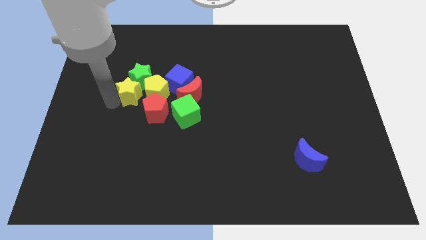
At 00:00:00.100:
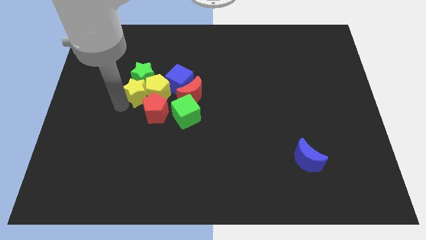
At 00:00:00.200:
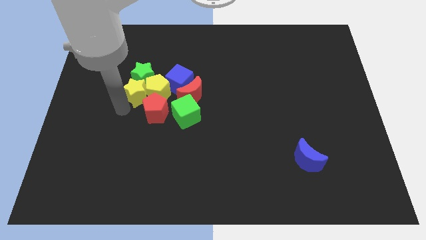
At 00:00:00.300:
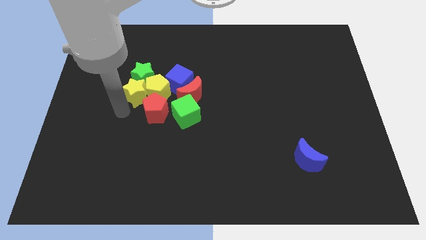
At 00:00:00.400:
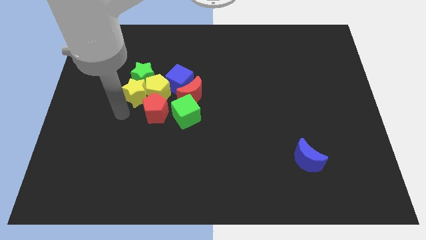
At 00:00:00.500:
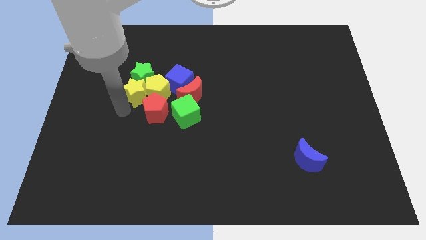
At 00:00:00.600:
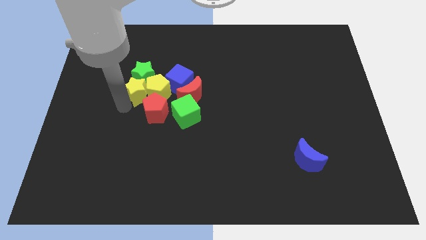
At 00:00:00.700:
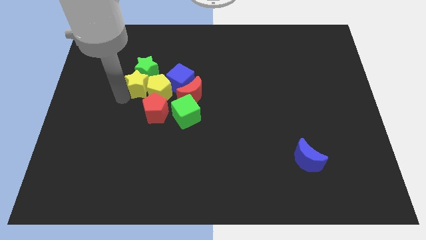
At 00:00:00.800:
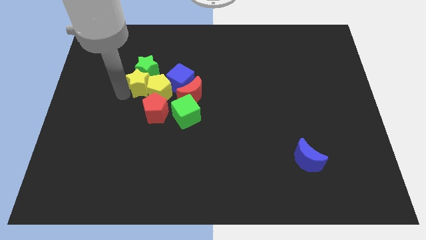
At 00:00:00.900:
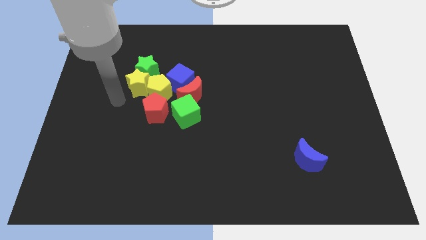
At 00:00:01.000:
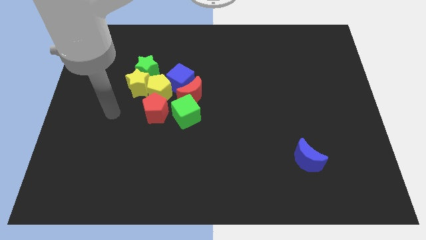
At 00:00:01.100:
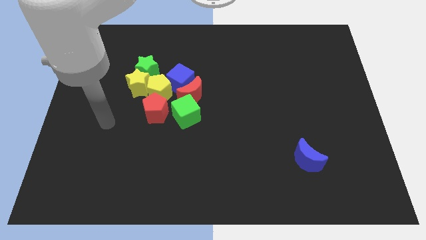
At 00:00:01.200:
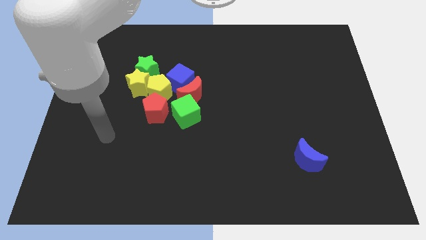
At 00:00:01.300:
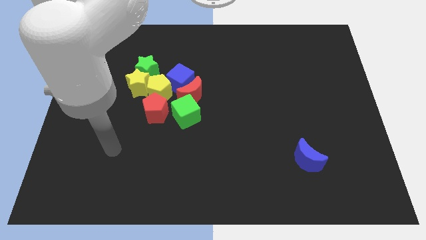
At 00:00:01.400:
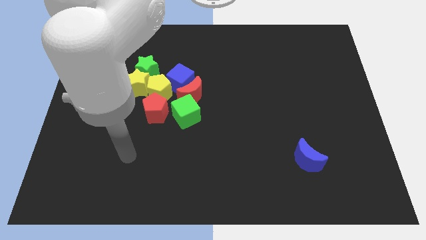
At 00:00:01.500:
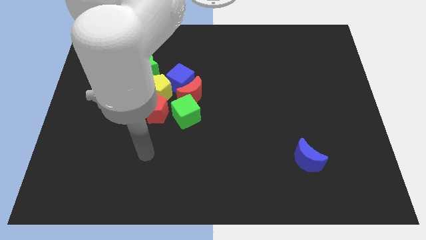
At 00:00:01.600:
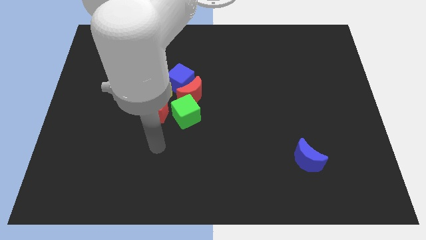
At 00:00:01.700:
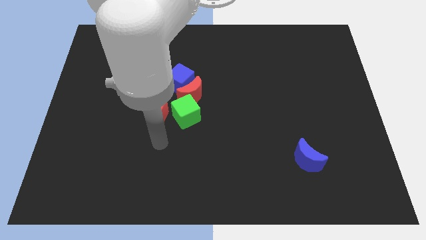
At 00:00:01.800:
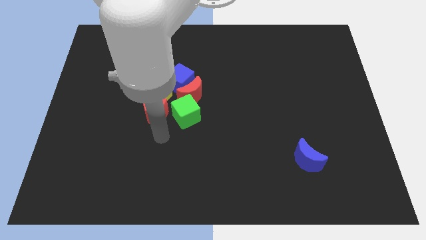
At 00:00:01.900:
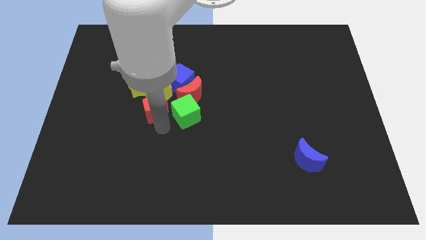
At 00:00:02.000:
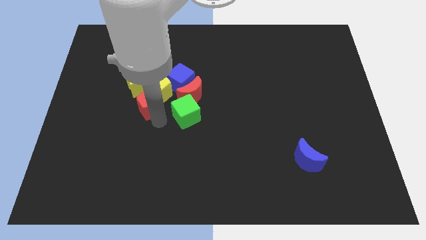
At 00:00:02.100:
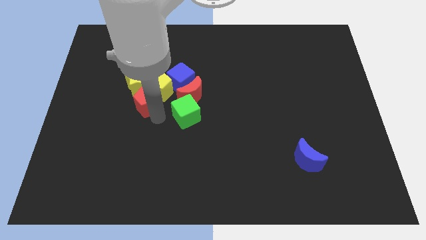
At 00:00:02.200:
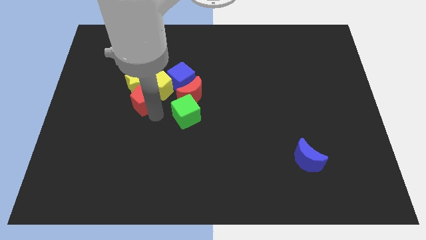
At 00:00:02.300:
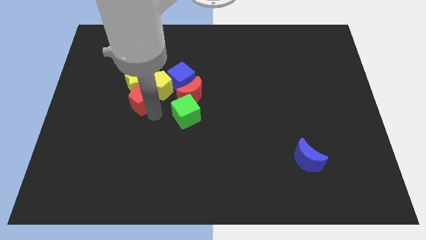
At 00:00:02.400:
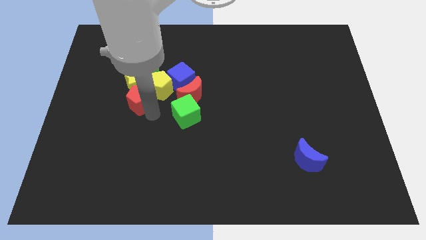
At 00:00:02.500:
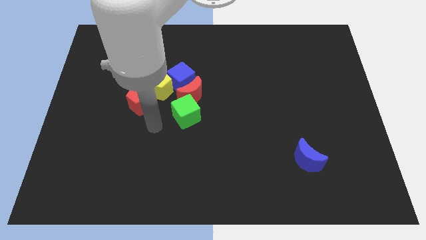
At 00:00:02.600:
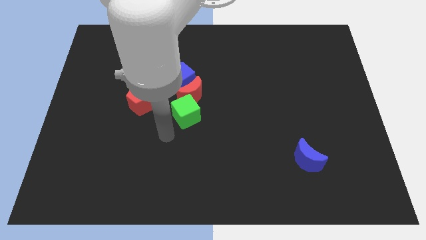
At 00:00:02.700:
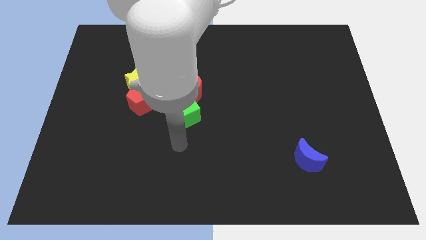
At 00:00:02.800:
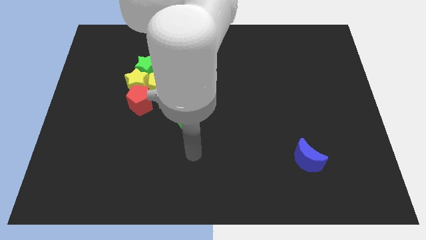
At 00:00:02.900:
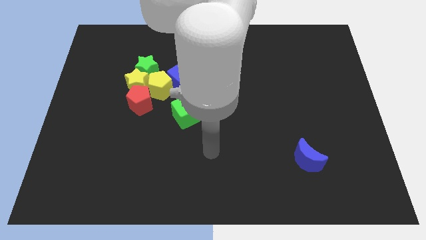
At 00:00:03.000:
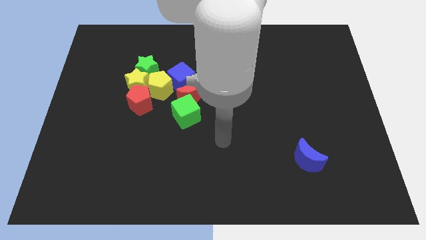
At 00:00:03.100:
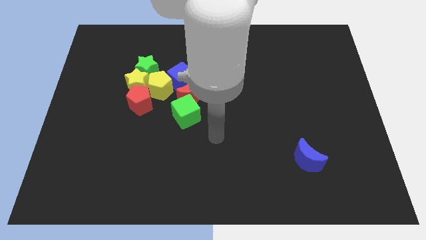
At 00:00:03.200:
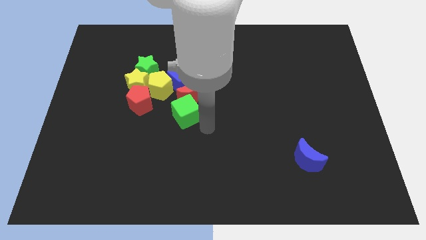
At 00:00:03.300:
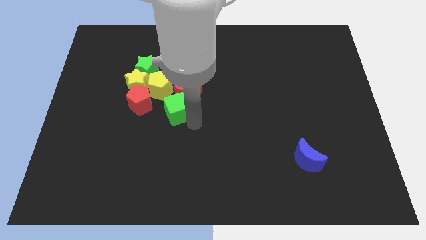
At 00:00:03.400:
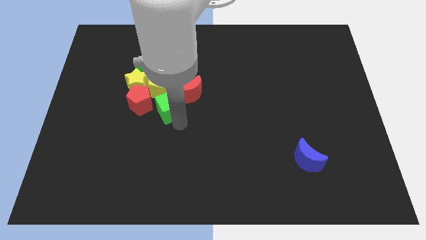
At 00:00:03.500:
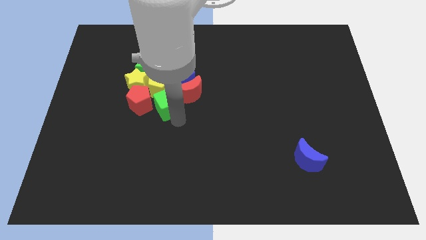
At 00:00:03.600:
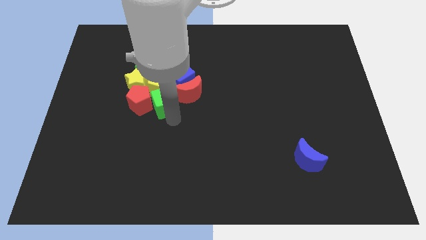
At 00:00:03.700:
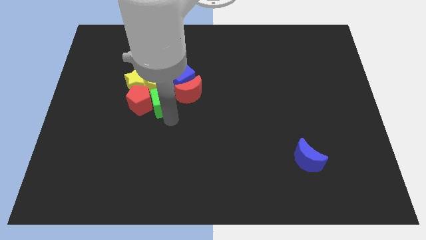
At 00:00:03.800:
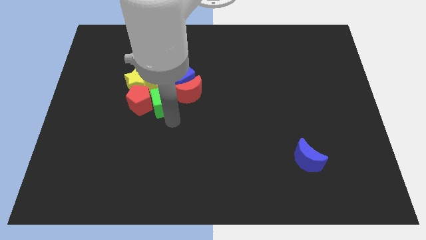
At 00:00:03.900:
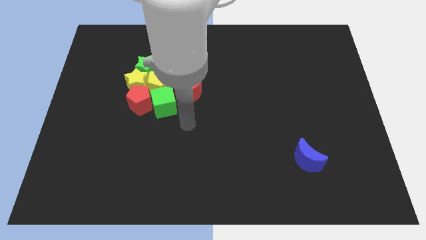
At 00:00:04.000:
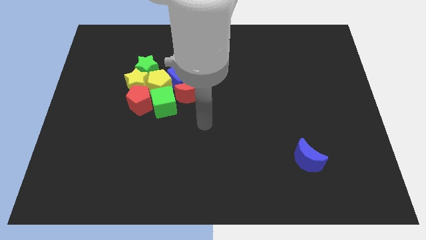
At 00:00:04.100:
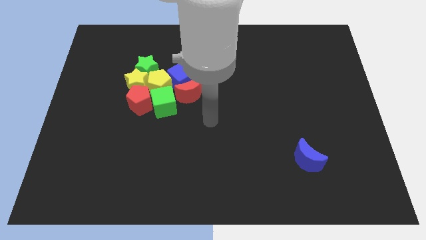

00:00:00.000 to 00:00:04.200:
adjust the group of blocks close to each other

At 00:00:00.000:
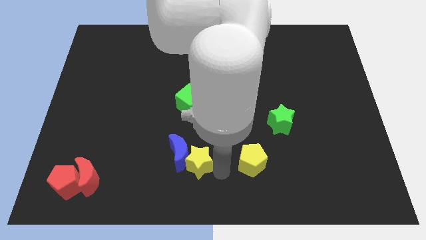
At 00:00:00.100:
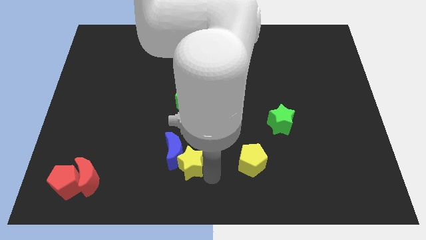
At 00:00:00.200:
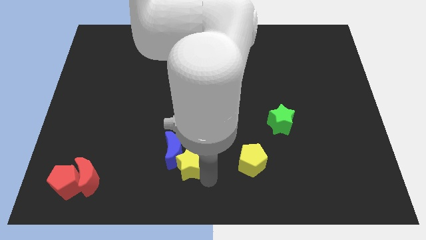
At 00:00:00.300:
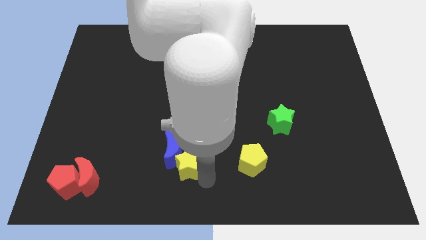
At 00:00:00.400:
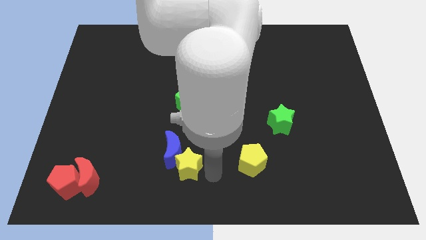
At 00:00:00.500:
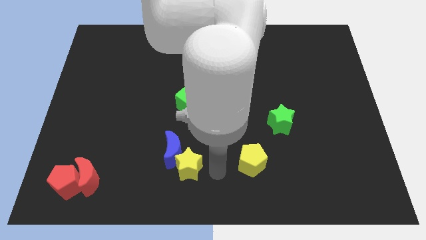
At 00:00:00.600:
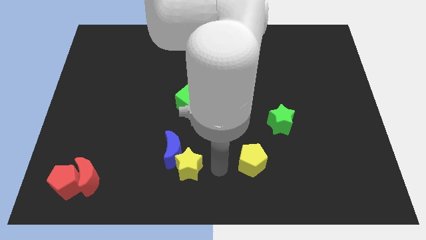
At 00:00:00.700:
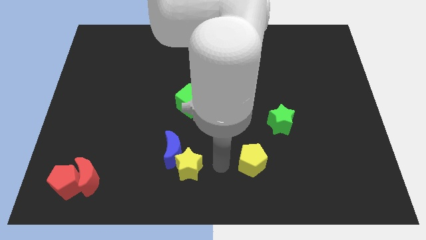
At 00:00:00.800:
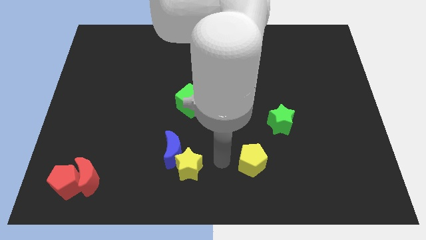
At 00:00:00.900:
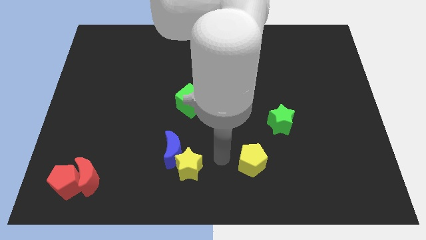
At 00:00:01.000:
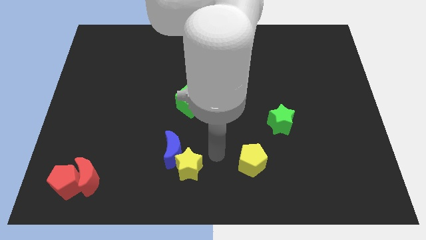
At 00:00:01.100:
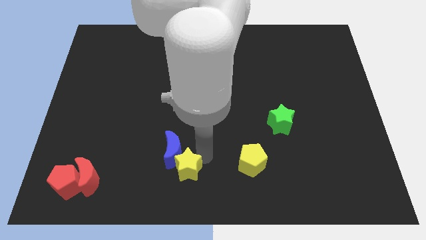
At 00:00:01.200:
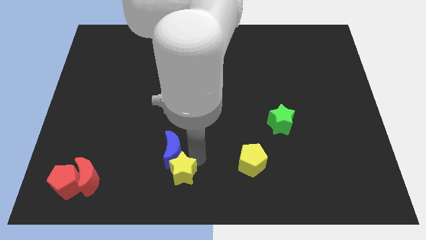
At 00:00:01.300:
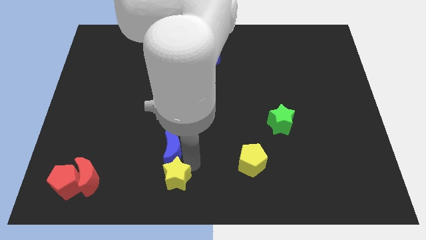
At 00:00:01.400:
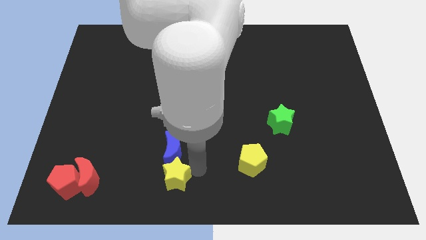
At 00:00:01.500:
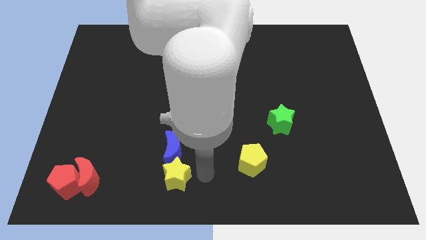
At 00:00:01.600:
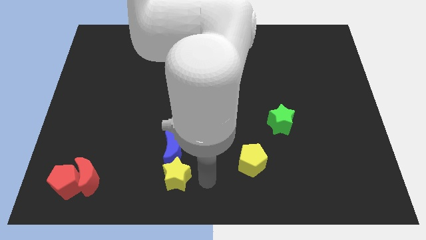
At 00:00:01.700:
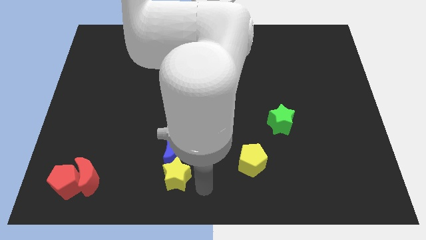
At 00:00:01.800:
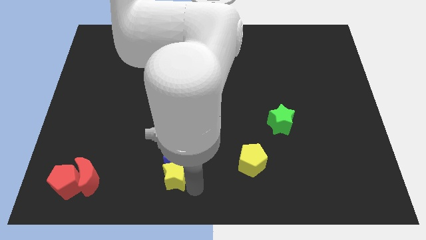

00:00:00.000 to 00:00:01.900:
move the yellow star to the bottom of the blue crescent

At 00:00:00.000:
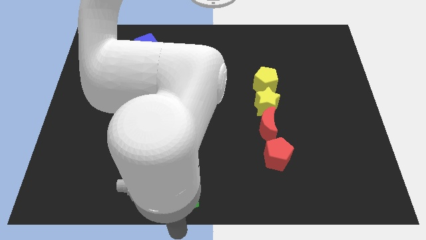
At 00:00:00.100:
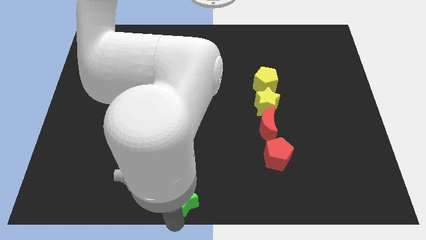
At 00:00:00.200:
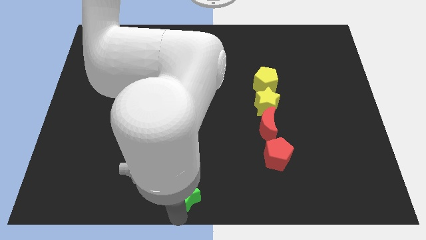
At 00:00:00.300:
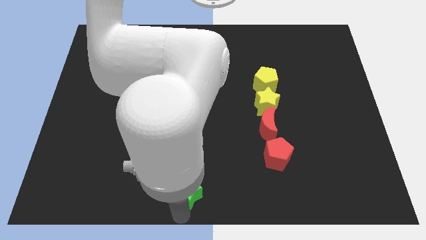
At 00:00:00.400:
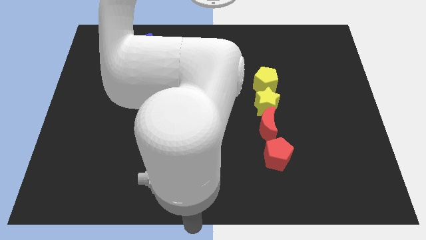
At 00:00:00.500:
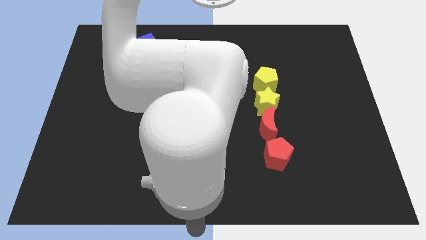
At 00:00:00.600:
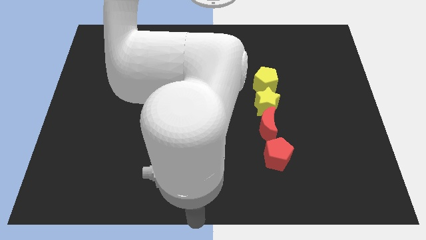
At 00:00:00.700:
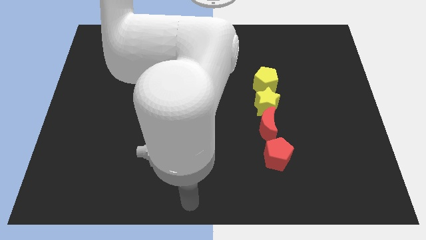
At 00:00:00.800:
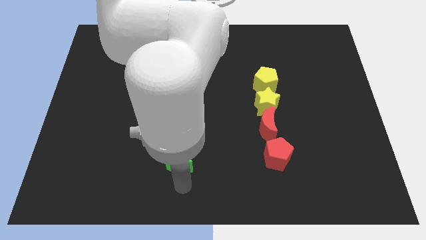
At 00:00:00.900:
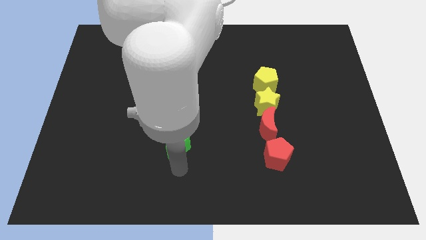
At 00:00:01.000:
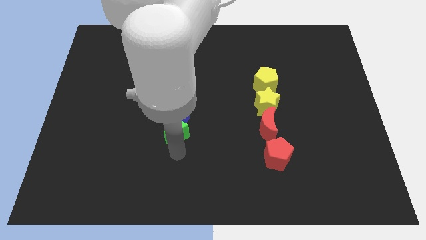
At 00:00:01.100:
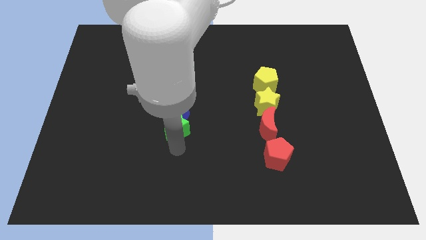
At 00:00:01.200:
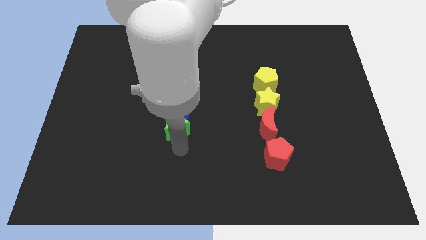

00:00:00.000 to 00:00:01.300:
push the green star into the blue moon

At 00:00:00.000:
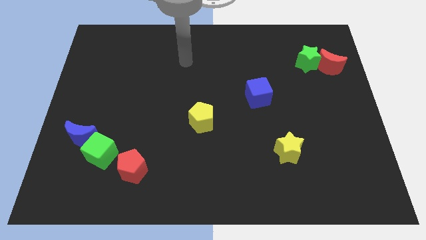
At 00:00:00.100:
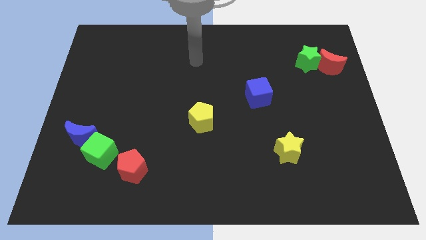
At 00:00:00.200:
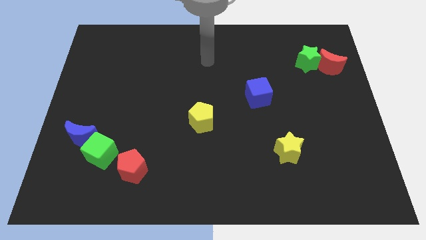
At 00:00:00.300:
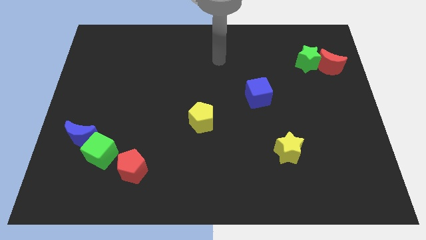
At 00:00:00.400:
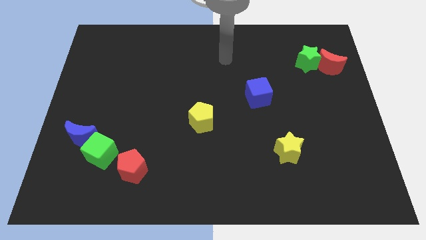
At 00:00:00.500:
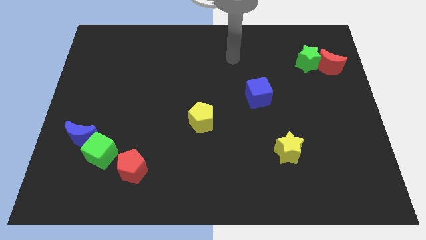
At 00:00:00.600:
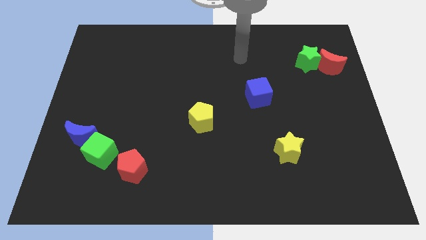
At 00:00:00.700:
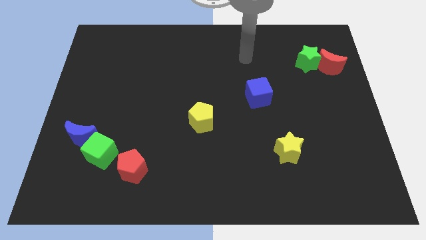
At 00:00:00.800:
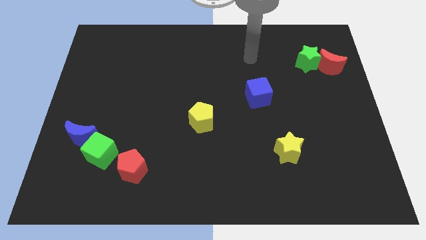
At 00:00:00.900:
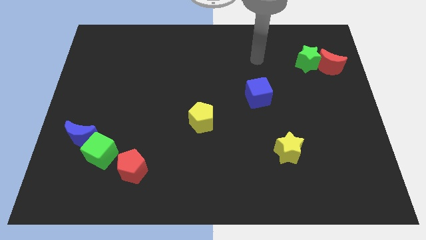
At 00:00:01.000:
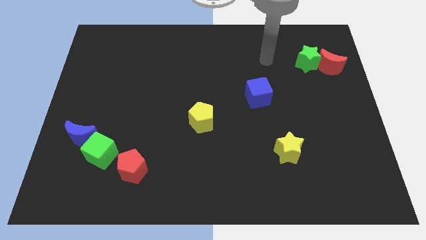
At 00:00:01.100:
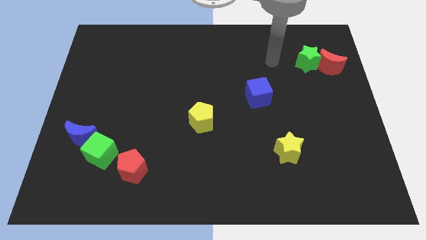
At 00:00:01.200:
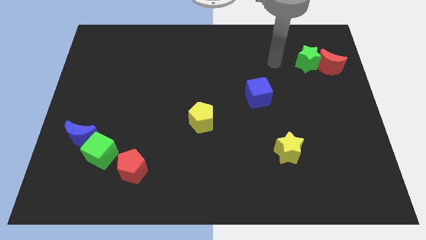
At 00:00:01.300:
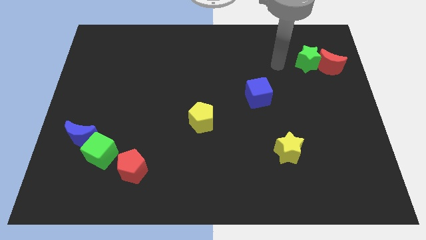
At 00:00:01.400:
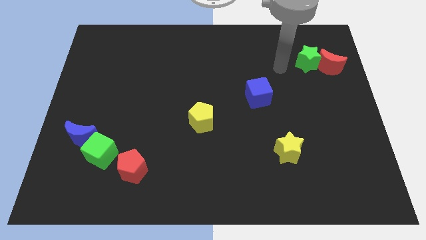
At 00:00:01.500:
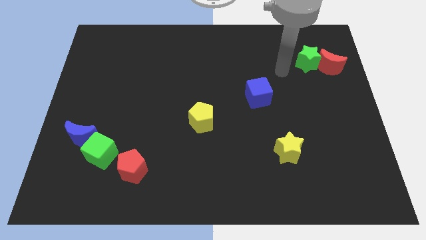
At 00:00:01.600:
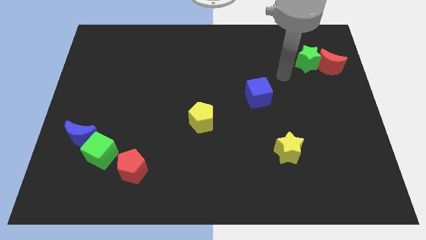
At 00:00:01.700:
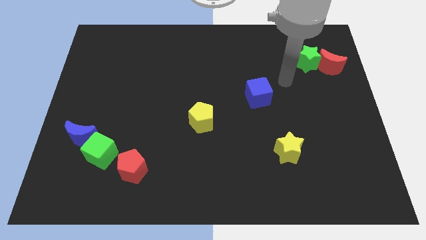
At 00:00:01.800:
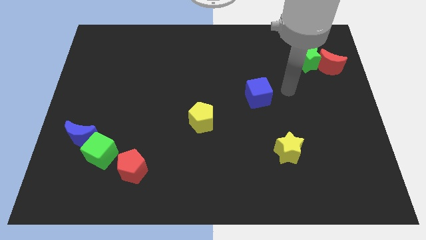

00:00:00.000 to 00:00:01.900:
move your arm right to the blue cube
